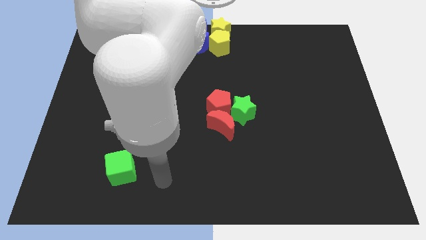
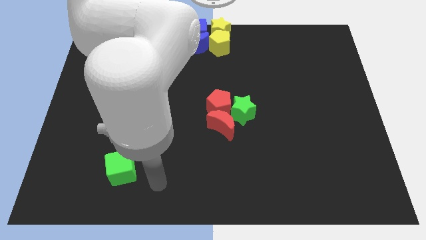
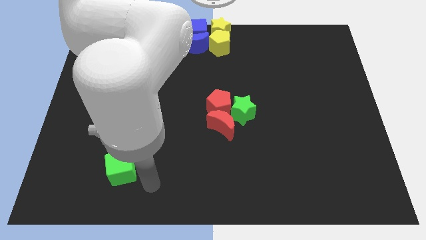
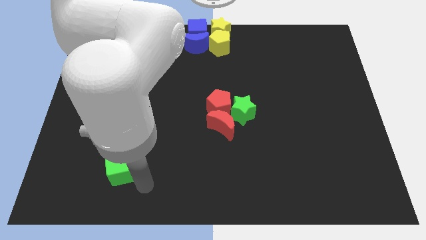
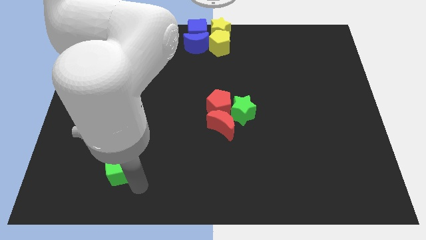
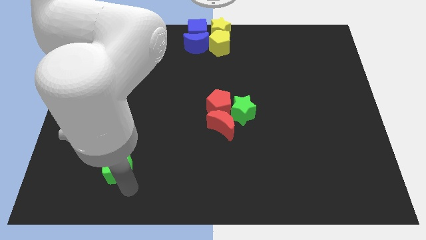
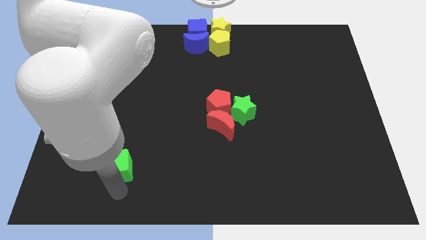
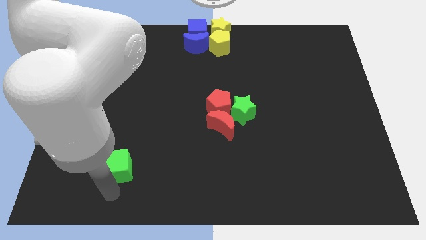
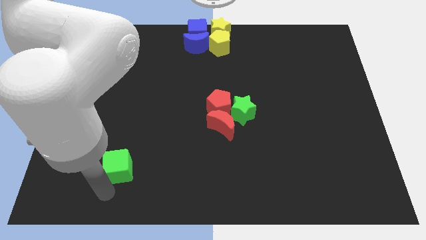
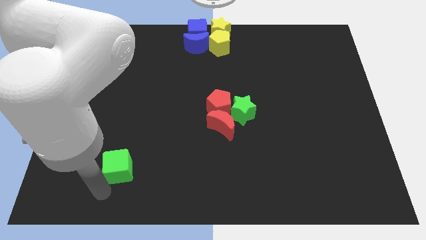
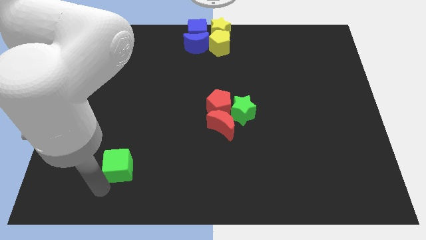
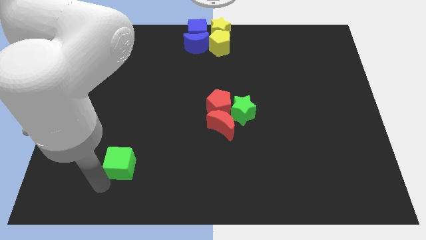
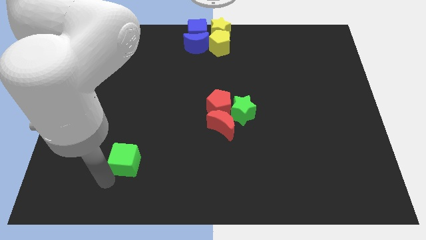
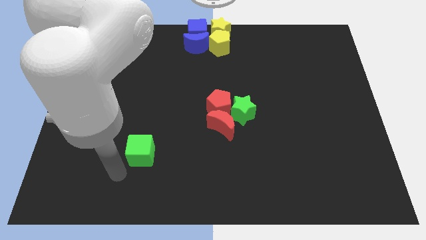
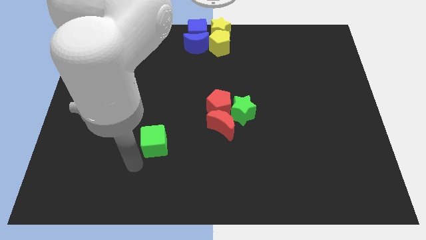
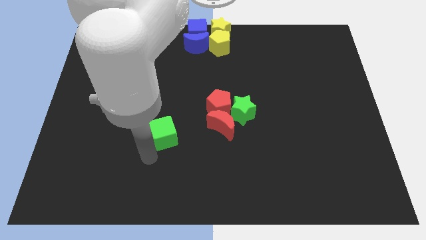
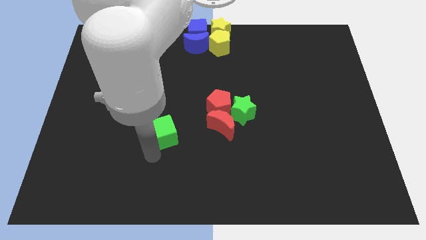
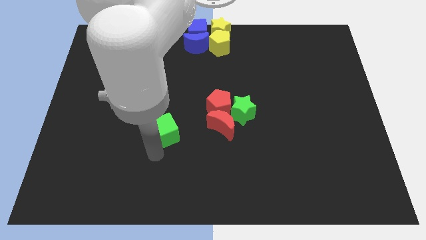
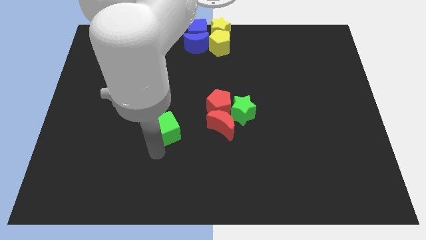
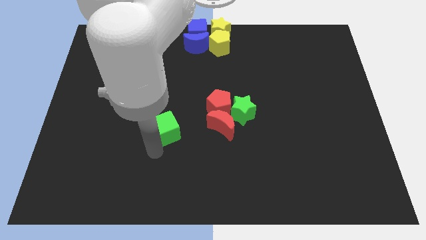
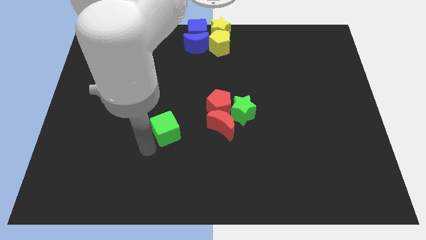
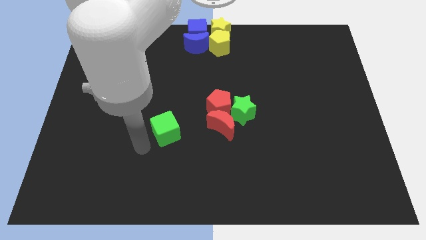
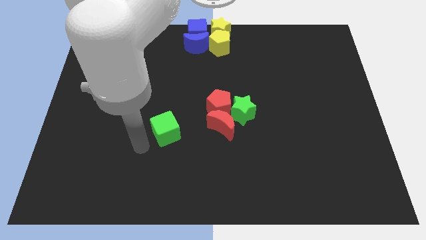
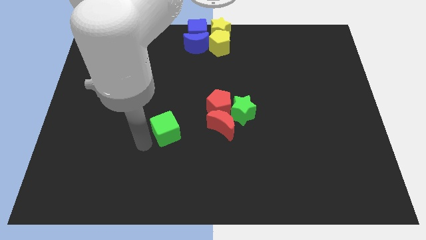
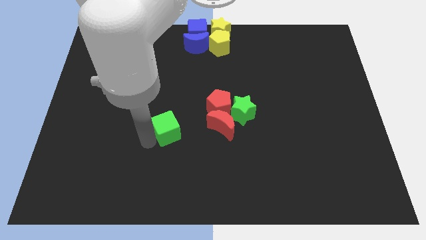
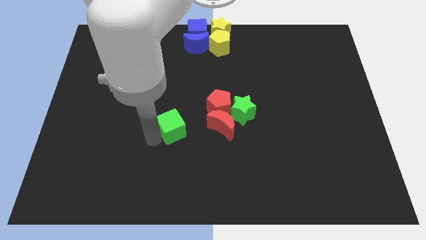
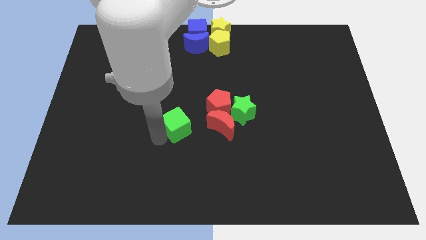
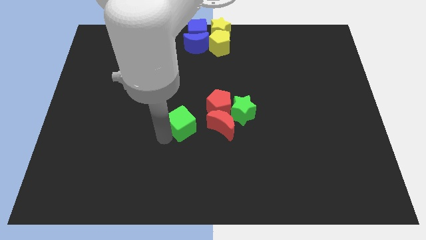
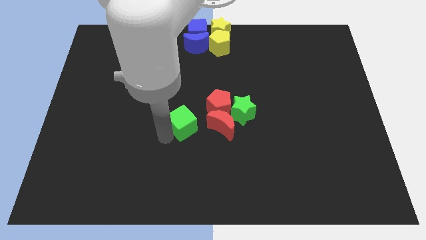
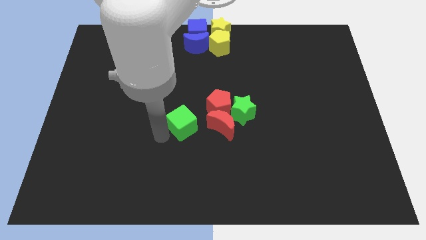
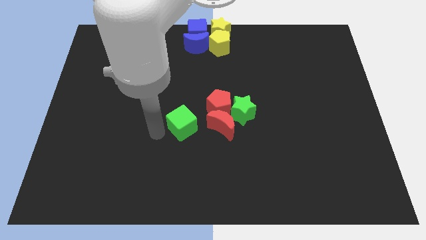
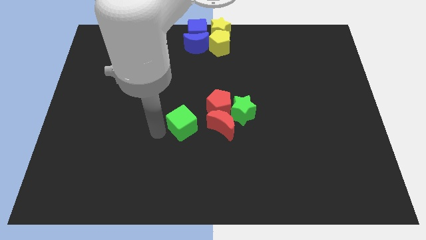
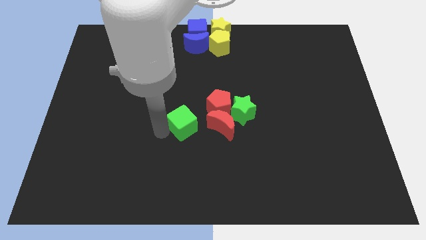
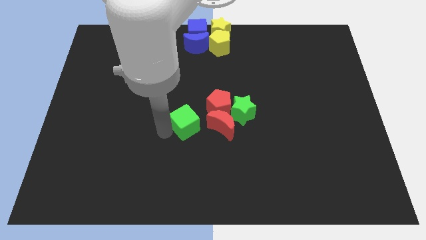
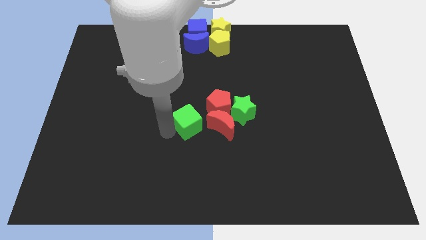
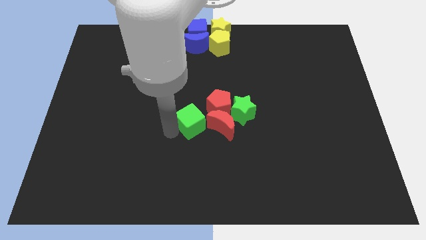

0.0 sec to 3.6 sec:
take the green cube close to the group of red blocks

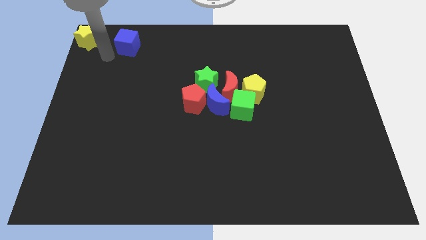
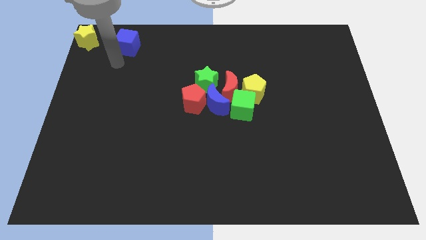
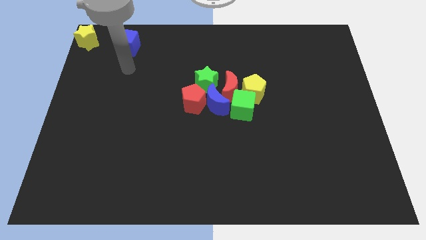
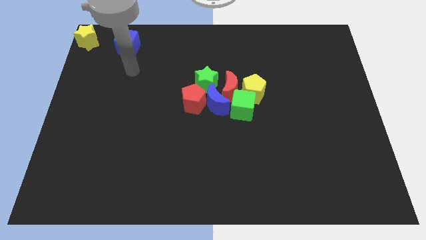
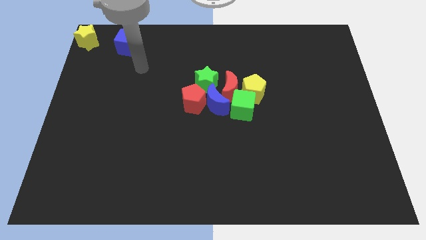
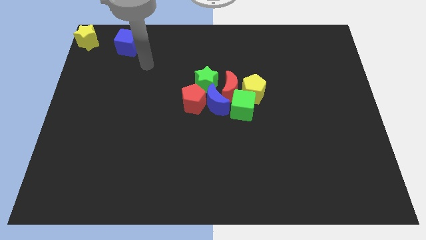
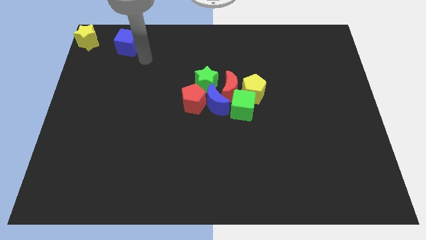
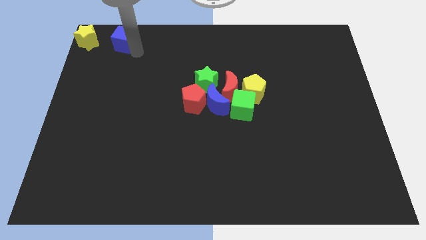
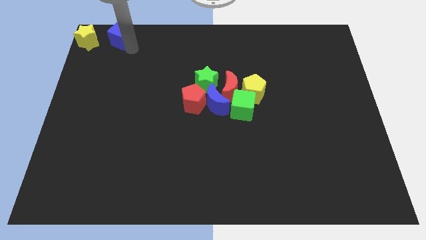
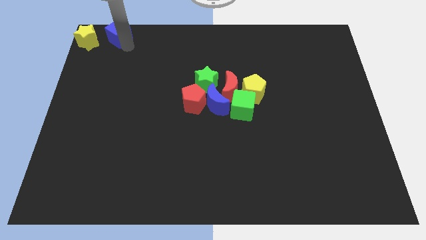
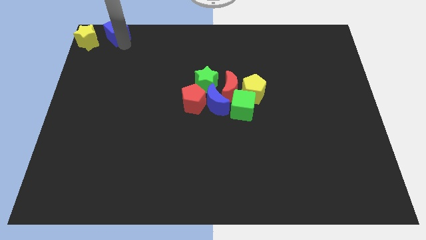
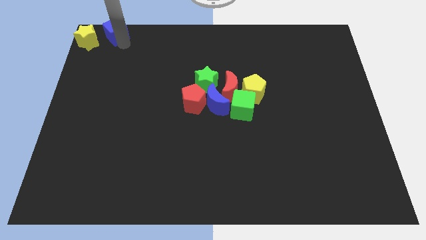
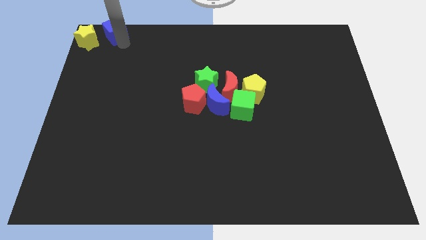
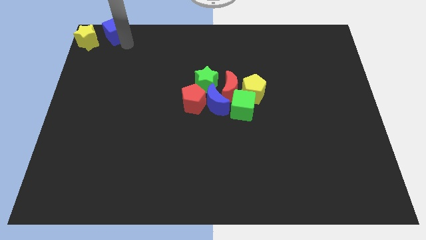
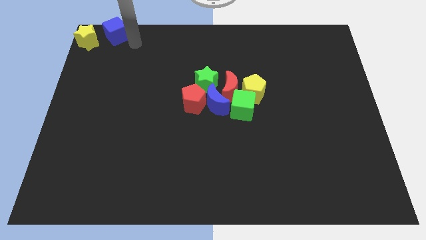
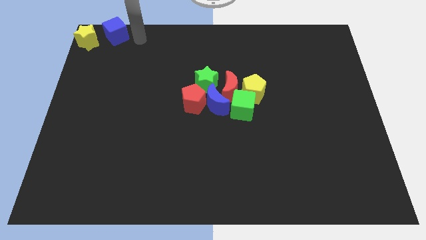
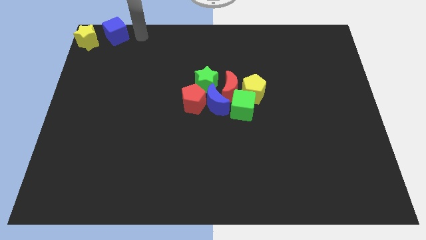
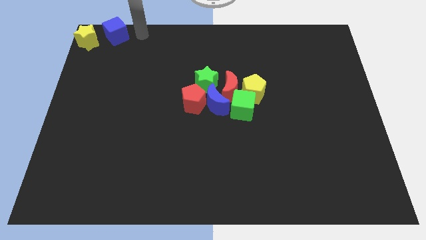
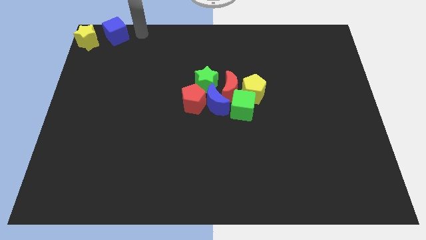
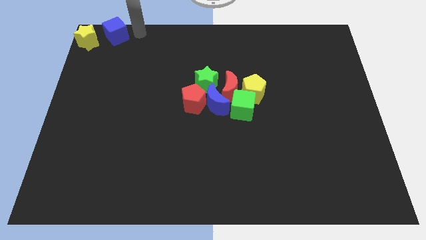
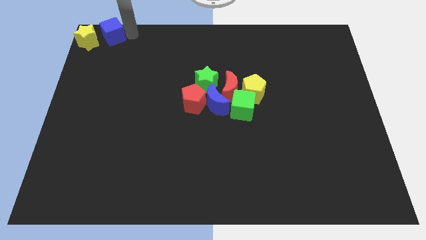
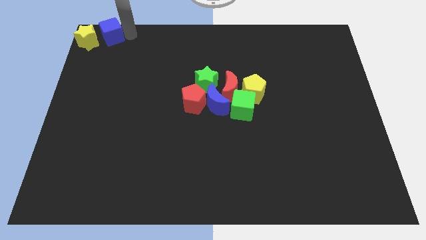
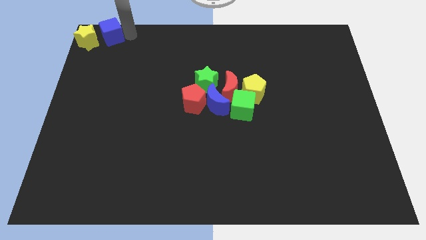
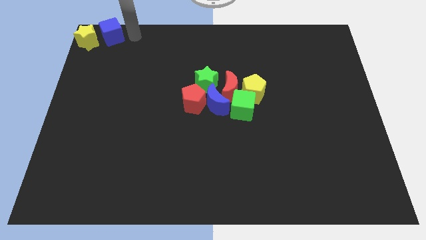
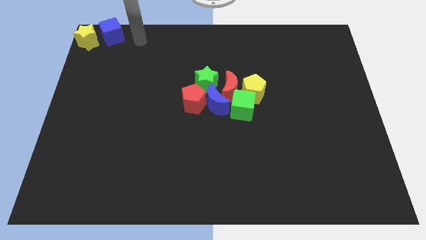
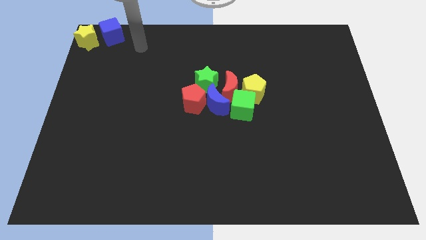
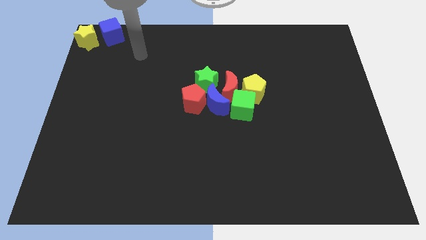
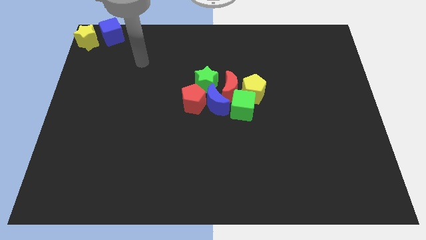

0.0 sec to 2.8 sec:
place the blue cube to the right of the yellow star

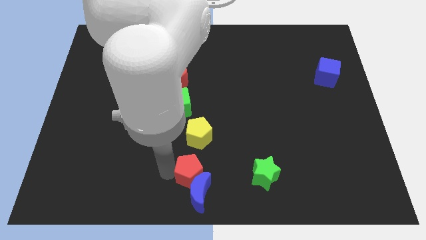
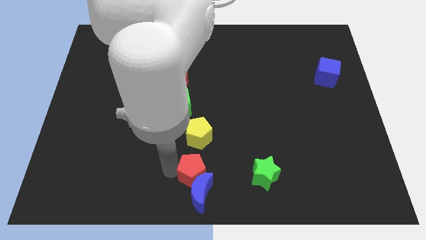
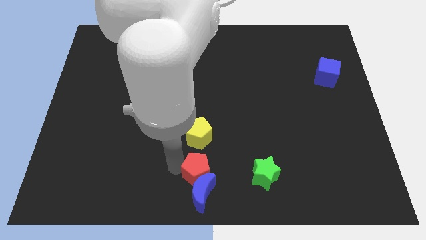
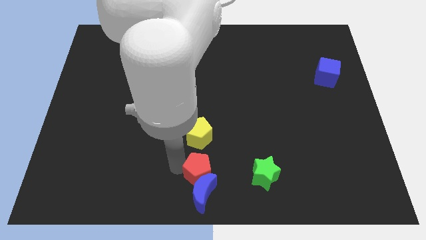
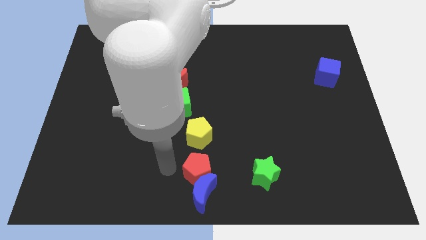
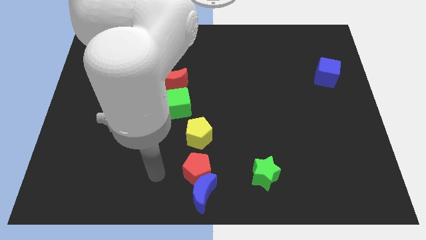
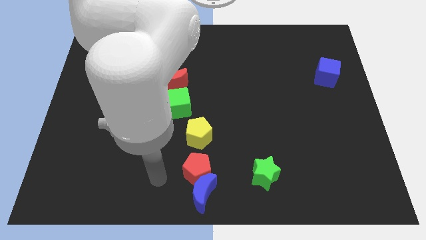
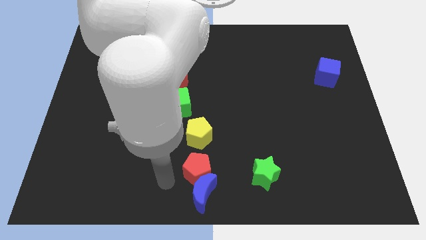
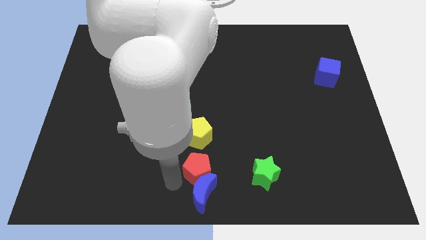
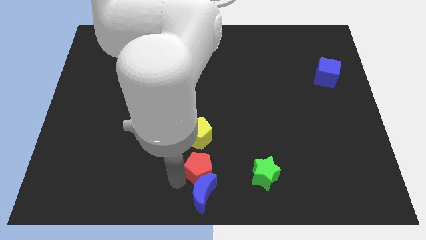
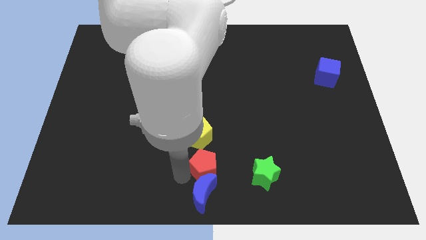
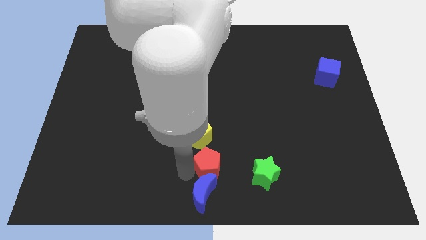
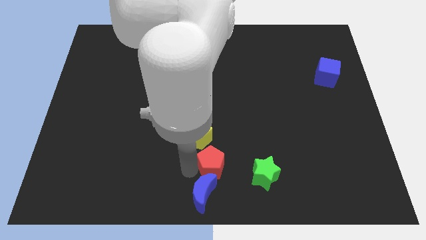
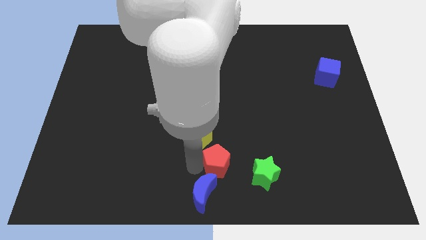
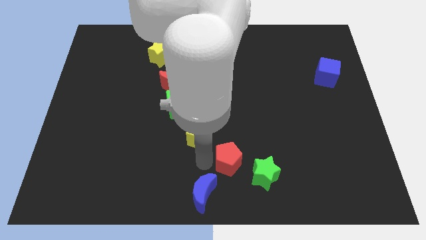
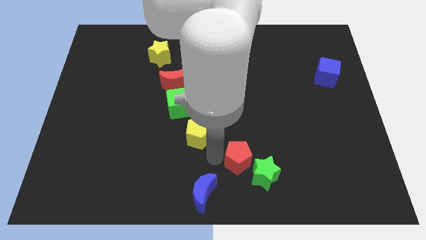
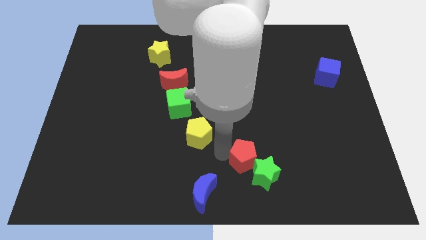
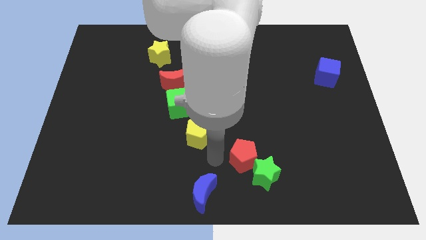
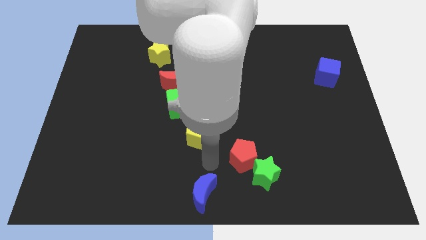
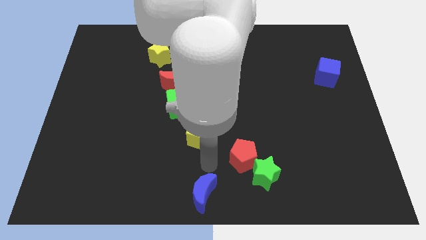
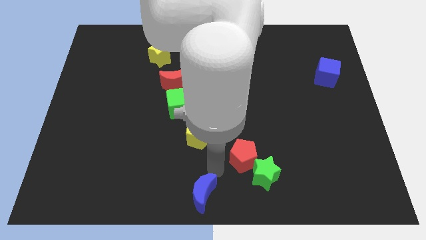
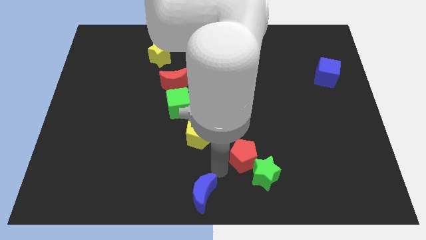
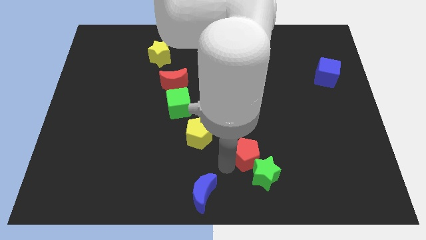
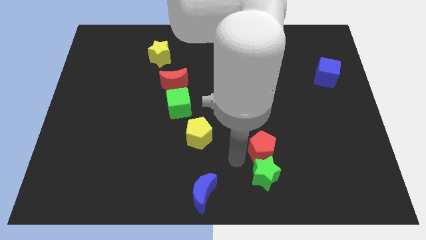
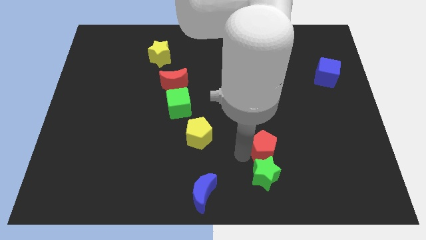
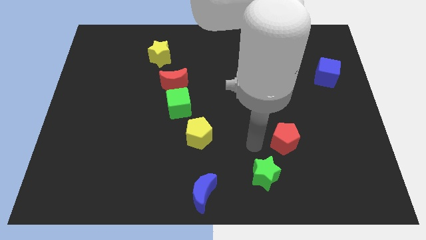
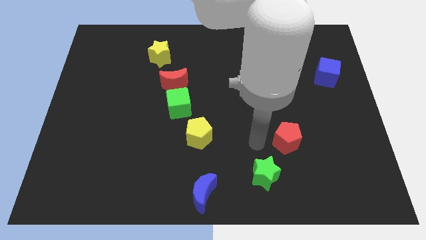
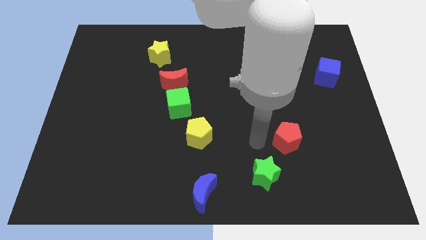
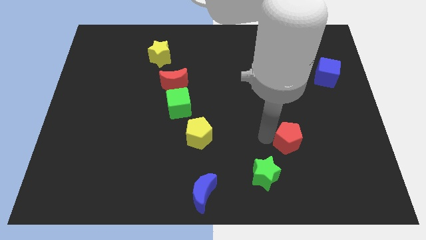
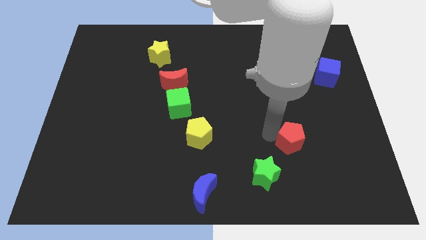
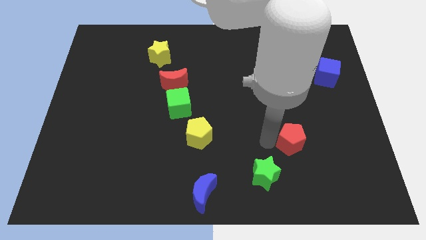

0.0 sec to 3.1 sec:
separate red pentagon from blue moon
